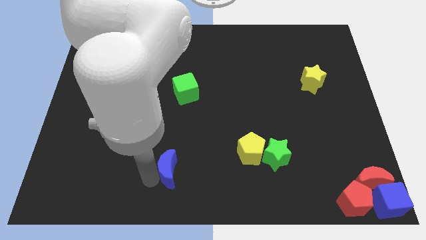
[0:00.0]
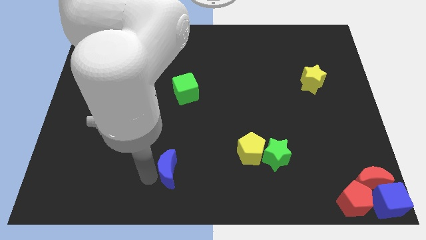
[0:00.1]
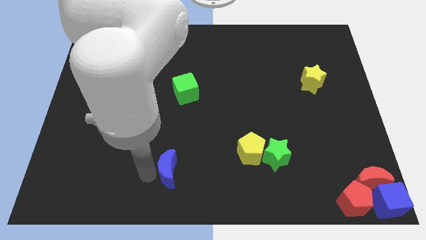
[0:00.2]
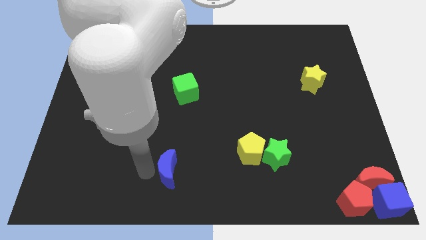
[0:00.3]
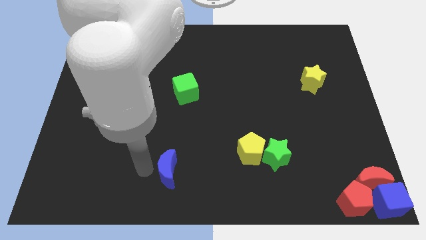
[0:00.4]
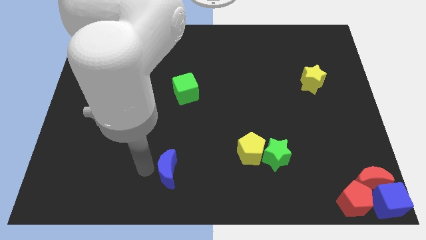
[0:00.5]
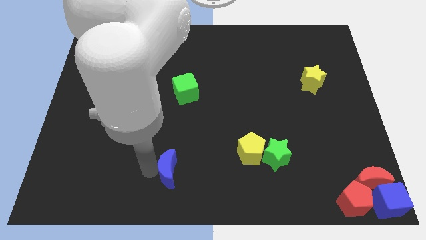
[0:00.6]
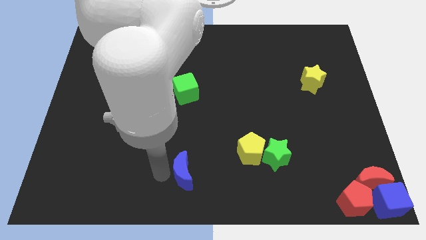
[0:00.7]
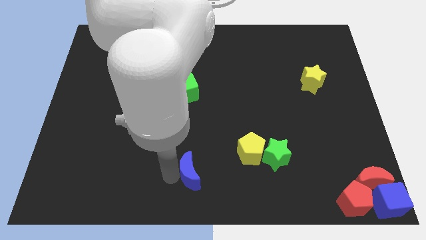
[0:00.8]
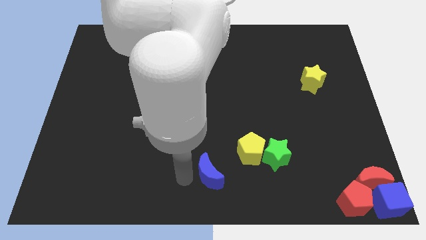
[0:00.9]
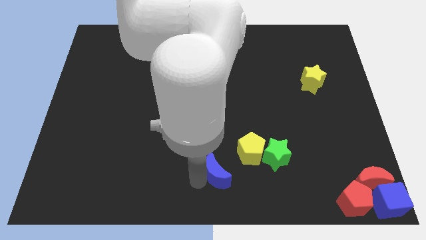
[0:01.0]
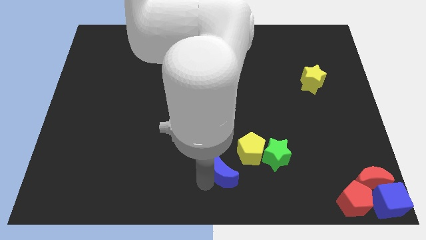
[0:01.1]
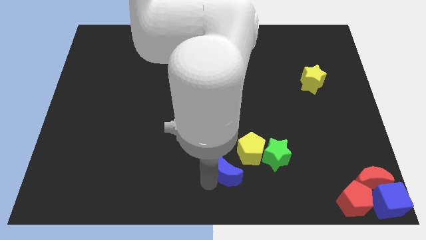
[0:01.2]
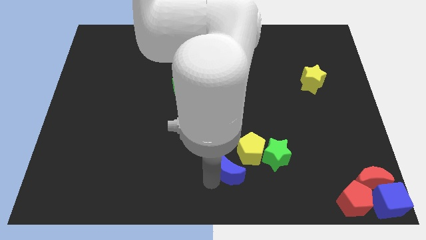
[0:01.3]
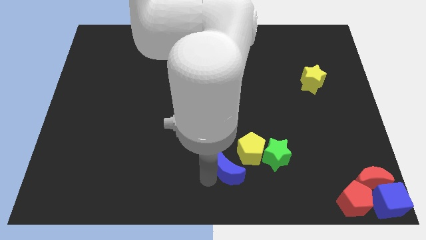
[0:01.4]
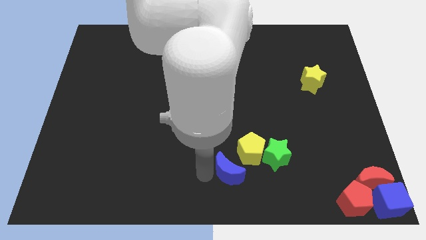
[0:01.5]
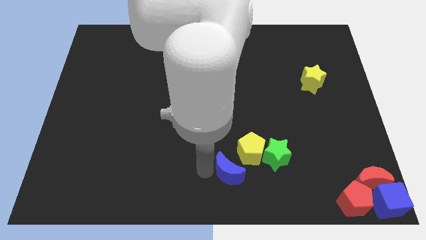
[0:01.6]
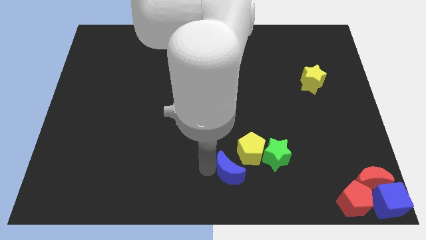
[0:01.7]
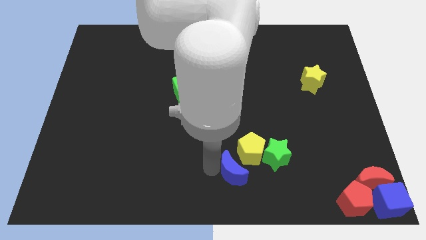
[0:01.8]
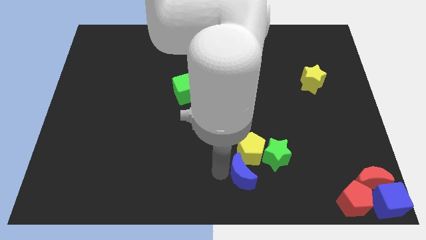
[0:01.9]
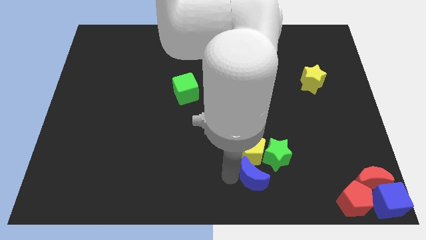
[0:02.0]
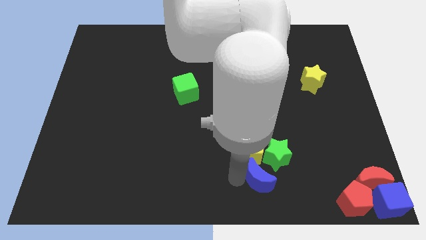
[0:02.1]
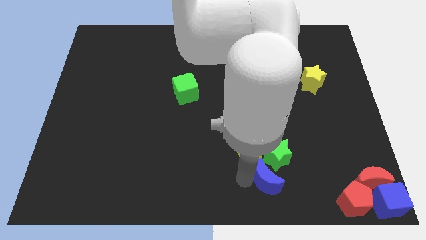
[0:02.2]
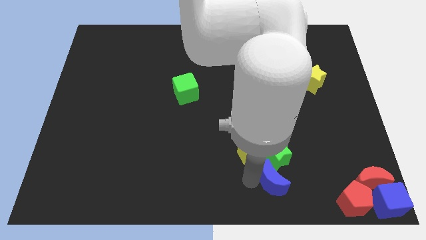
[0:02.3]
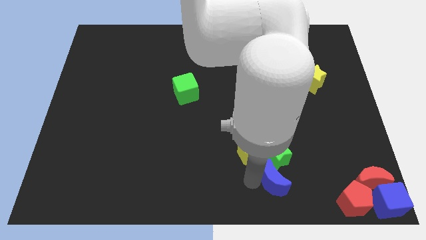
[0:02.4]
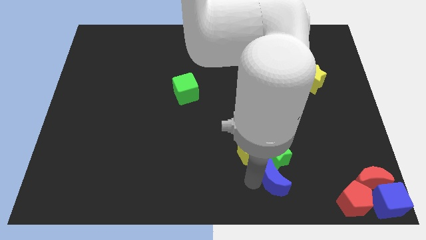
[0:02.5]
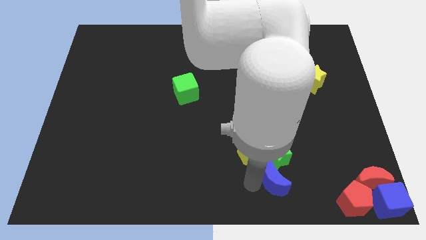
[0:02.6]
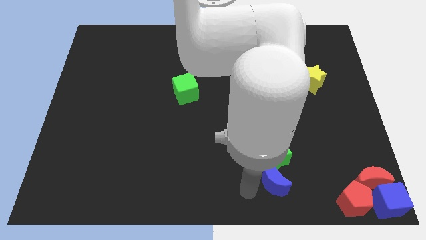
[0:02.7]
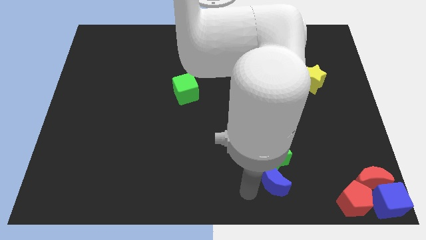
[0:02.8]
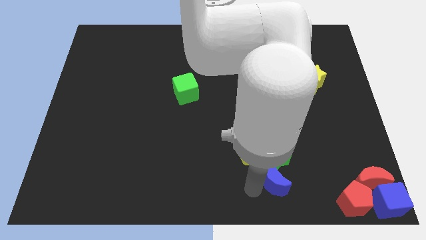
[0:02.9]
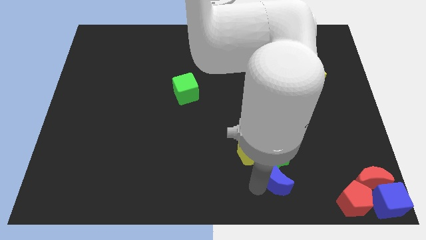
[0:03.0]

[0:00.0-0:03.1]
place the blue crescent to the bottom of the green star

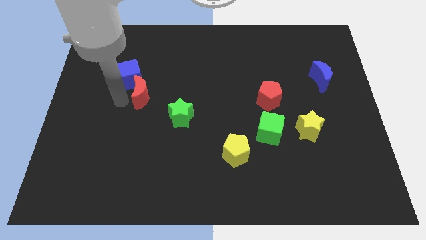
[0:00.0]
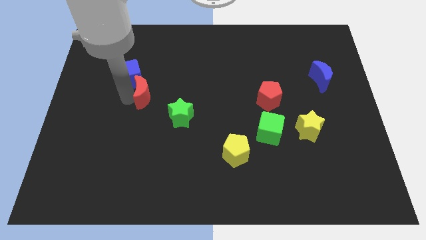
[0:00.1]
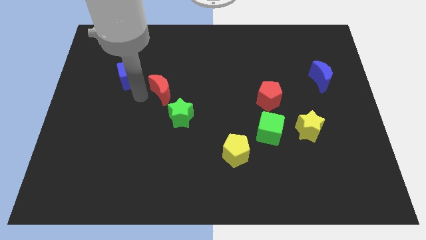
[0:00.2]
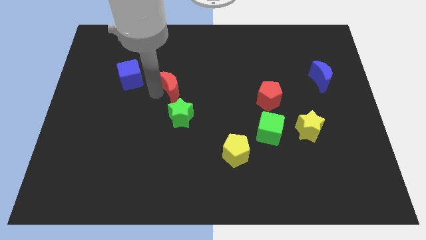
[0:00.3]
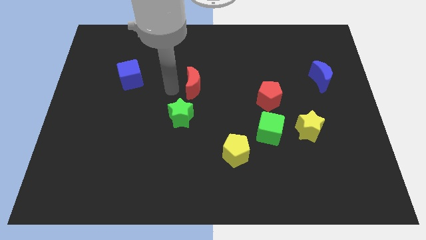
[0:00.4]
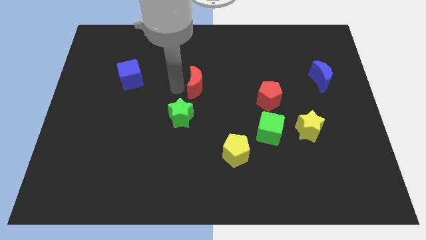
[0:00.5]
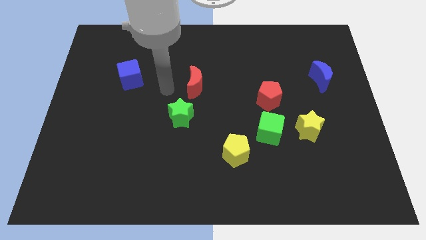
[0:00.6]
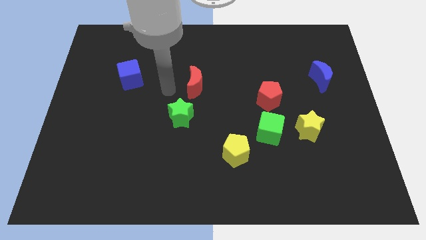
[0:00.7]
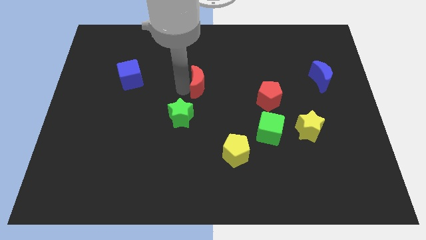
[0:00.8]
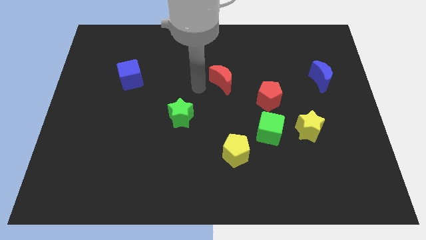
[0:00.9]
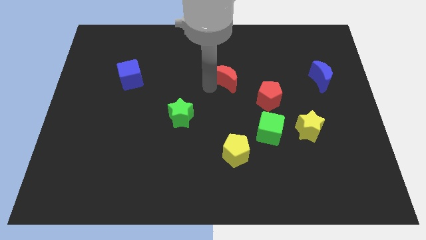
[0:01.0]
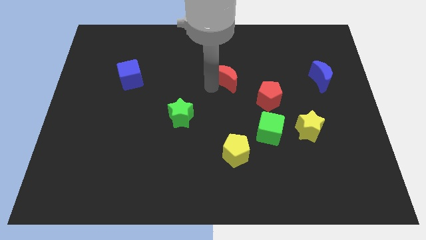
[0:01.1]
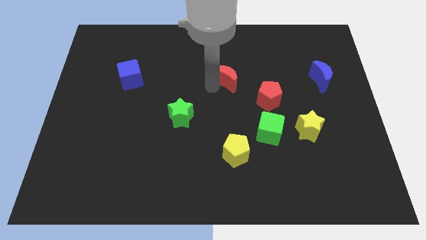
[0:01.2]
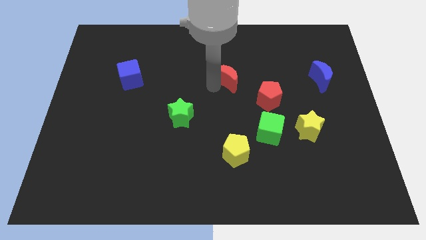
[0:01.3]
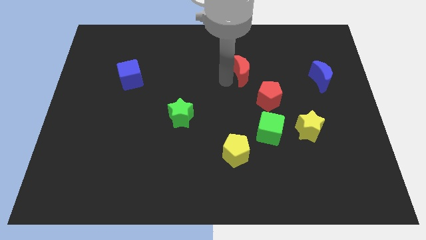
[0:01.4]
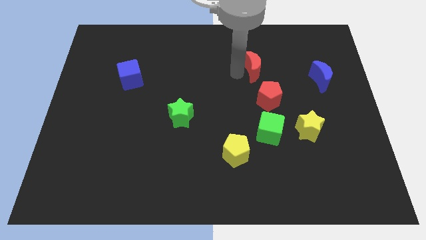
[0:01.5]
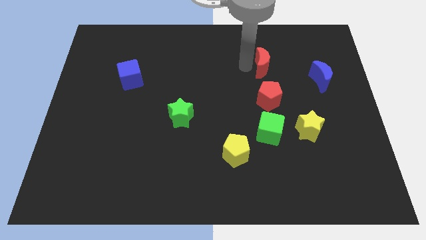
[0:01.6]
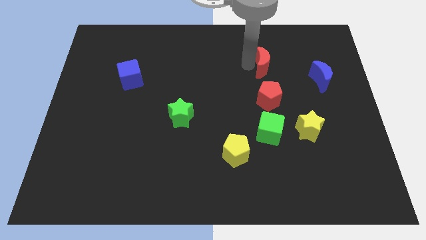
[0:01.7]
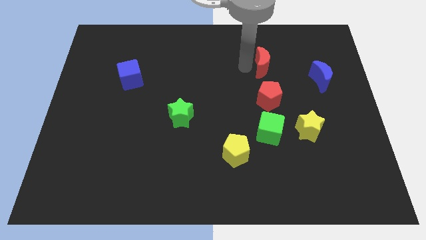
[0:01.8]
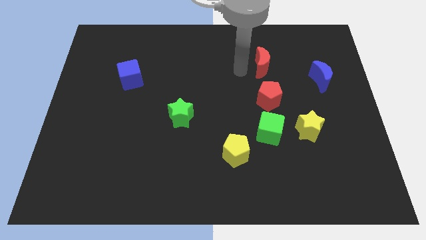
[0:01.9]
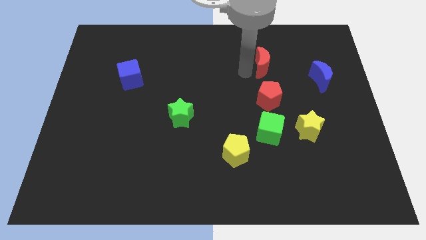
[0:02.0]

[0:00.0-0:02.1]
place red moon above the red pentagon

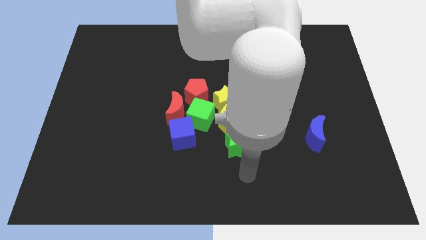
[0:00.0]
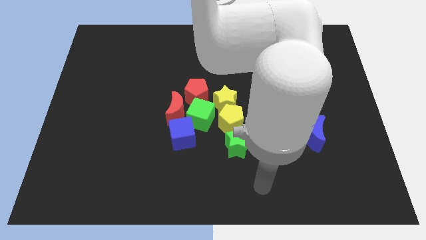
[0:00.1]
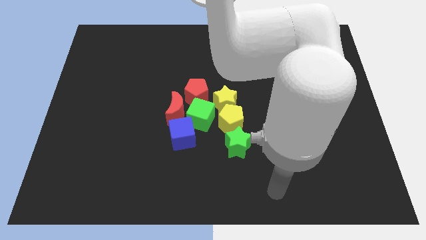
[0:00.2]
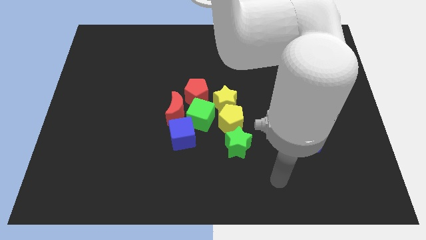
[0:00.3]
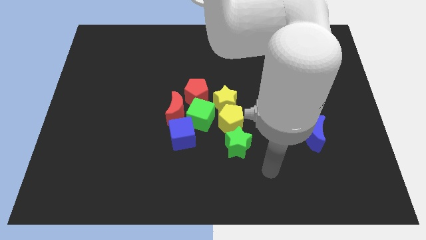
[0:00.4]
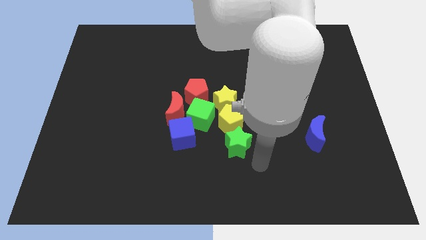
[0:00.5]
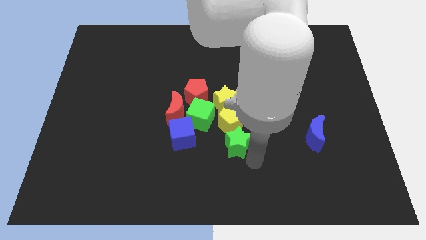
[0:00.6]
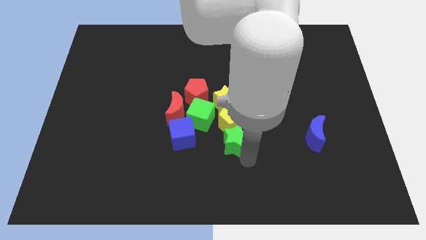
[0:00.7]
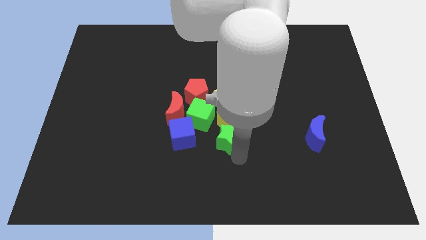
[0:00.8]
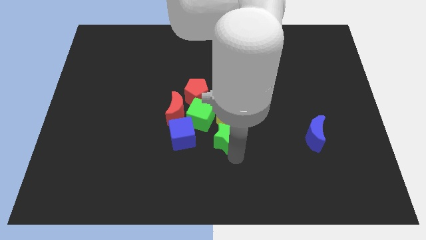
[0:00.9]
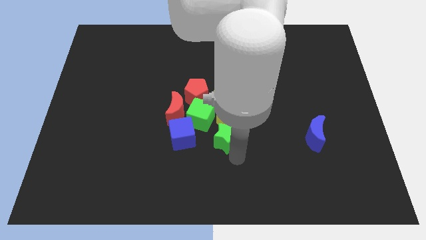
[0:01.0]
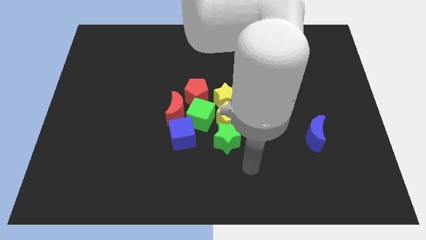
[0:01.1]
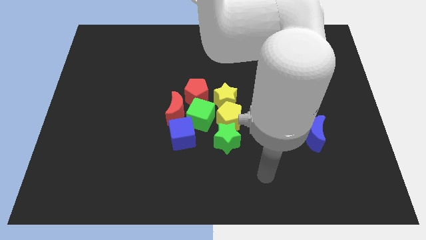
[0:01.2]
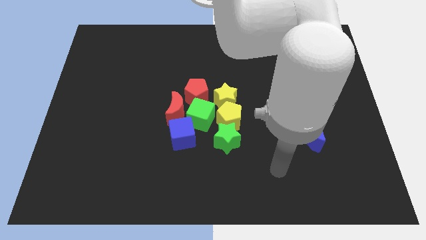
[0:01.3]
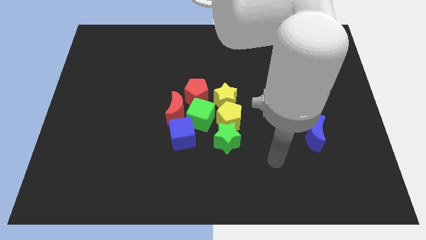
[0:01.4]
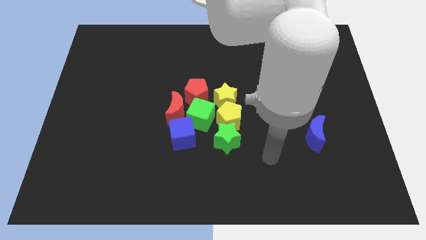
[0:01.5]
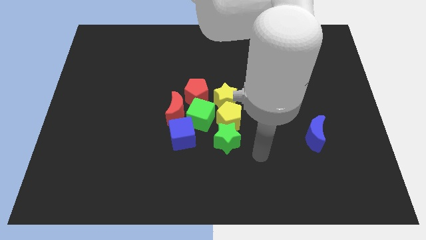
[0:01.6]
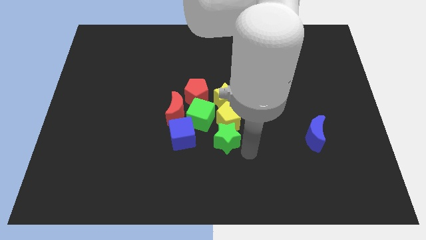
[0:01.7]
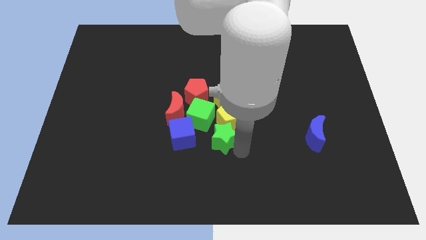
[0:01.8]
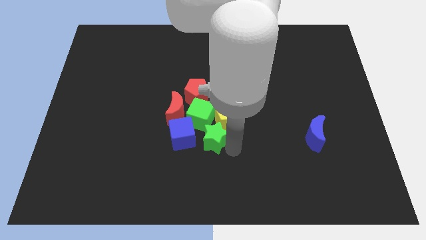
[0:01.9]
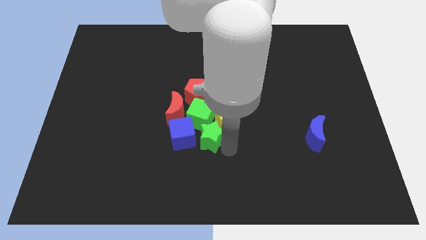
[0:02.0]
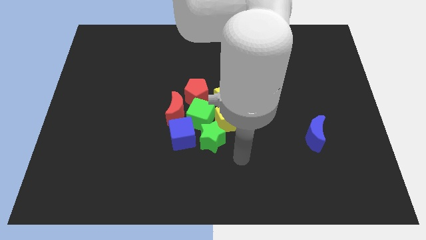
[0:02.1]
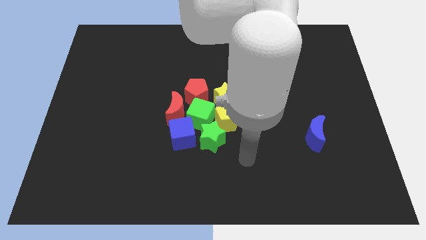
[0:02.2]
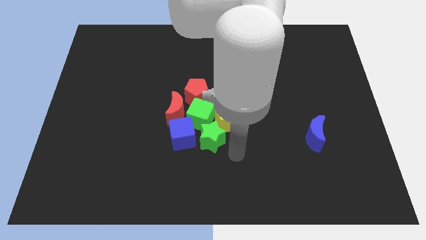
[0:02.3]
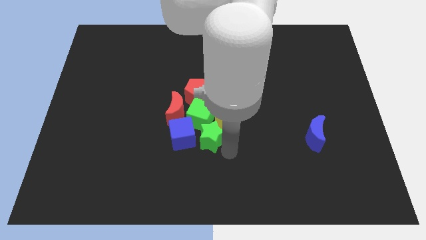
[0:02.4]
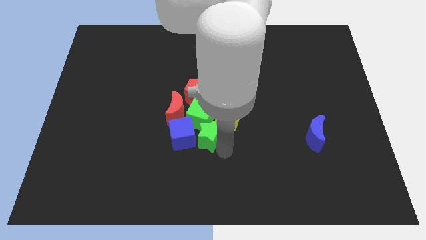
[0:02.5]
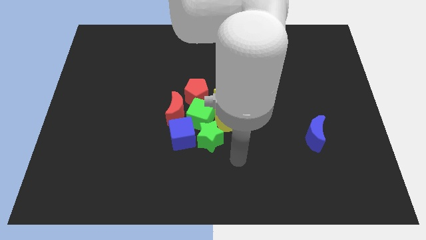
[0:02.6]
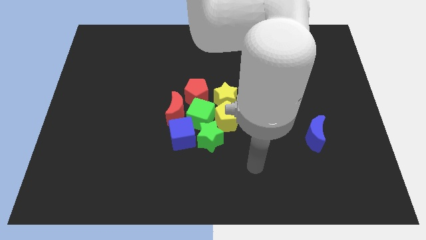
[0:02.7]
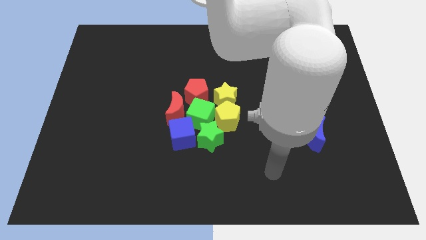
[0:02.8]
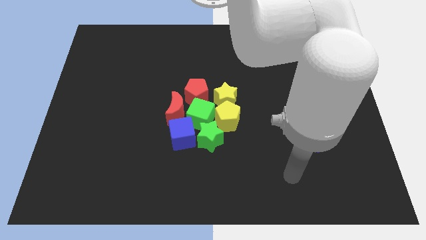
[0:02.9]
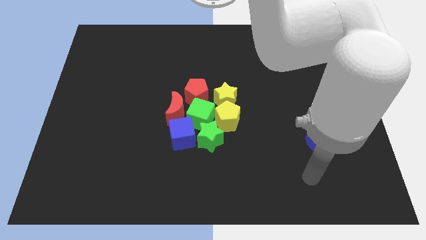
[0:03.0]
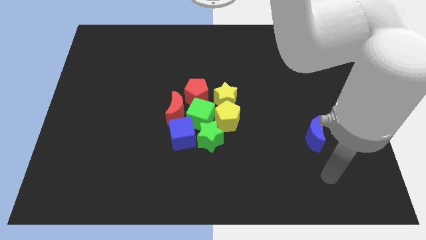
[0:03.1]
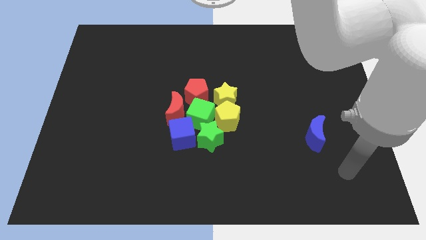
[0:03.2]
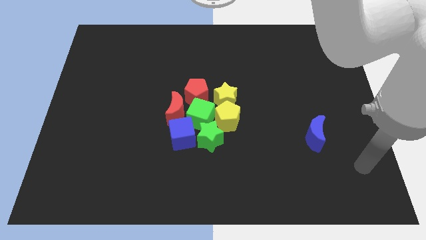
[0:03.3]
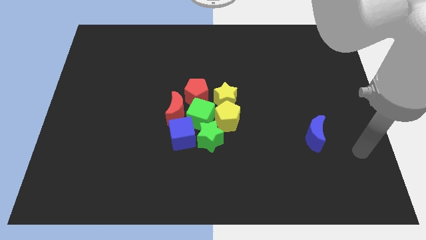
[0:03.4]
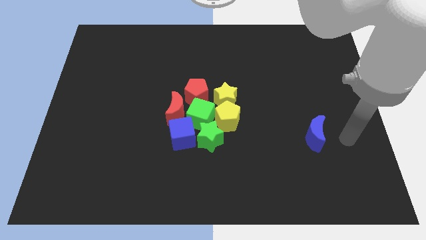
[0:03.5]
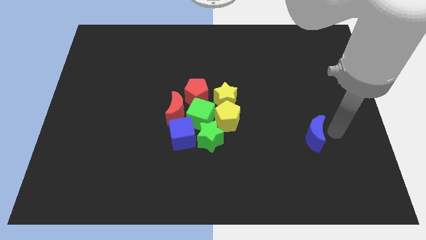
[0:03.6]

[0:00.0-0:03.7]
push the green star to the bottom of the green cube
